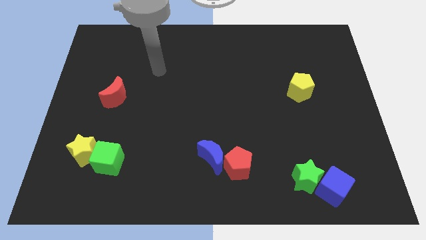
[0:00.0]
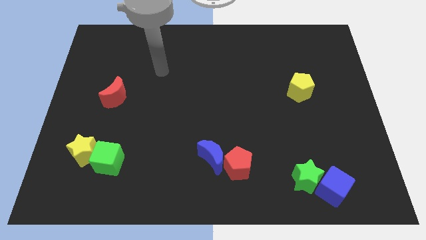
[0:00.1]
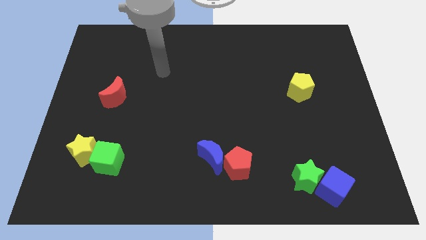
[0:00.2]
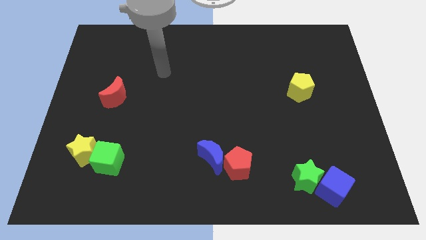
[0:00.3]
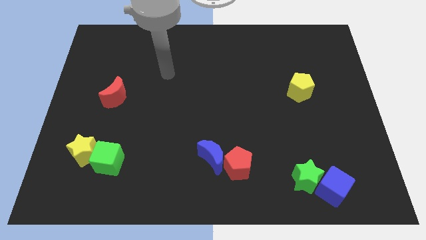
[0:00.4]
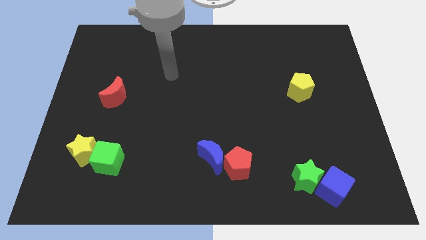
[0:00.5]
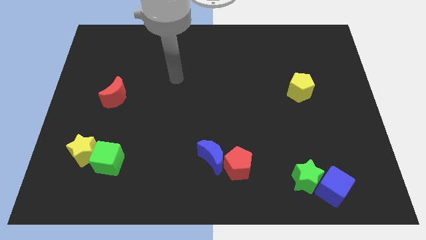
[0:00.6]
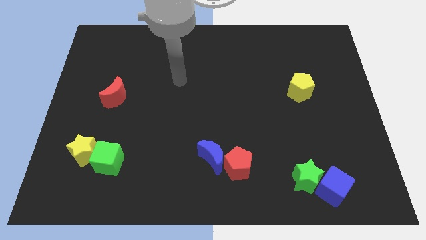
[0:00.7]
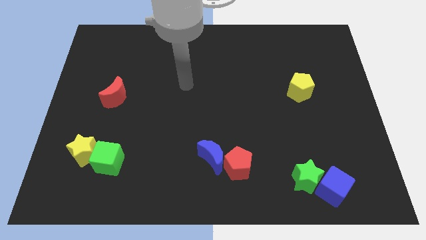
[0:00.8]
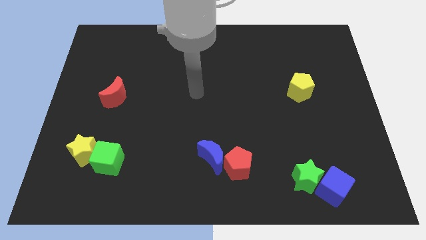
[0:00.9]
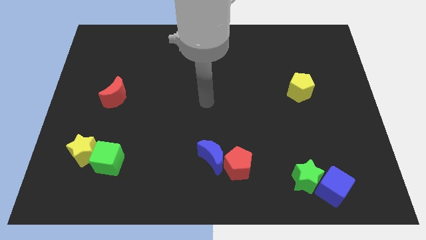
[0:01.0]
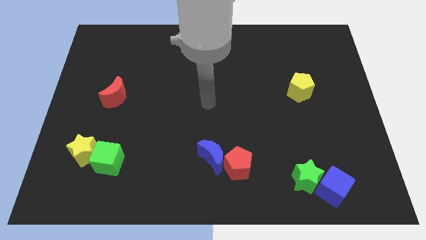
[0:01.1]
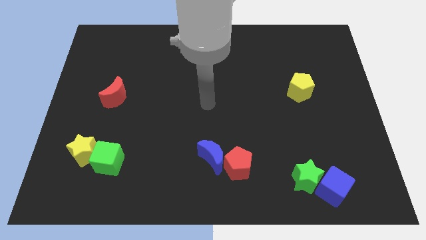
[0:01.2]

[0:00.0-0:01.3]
put your arm at the center of the board

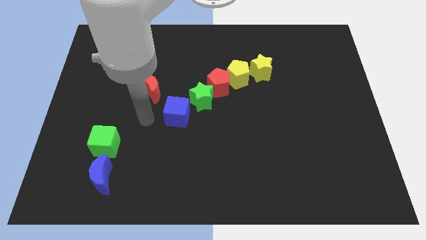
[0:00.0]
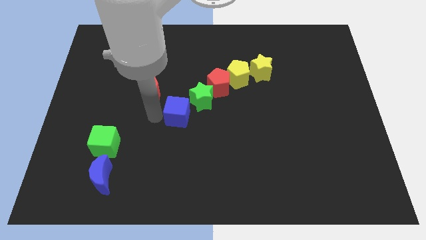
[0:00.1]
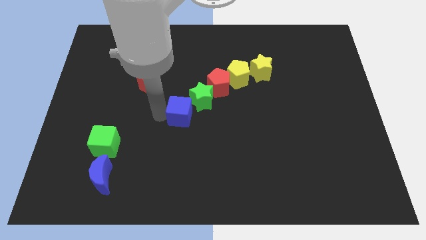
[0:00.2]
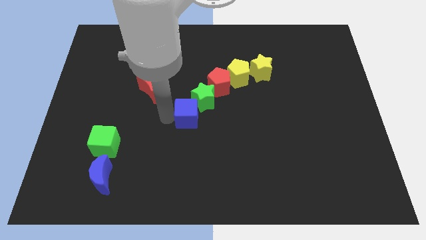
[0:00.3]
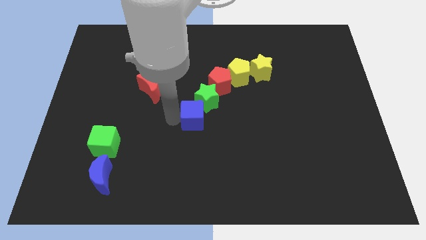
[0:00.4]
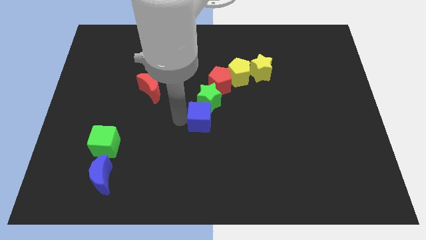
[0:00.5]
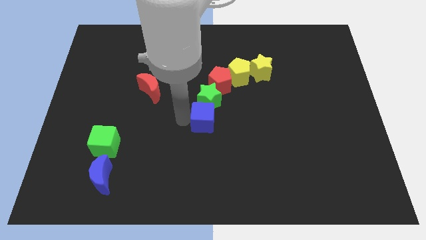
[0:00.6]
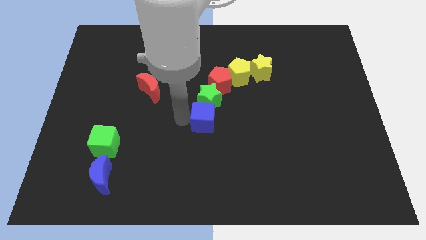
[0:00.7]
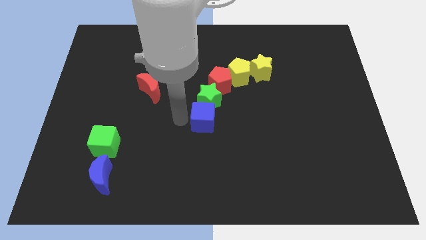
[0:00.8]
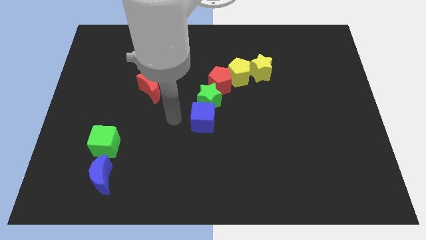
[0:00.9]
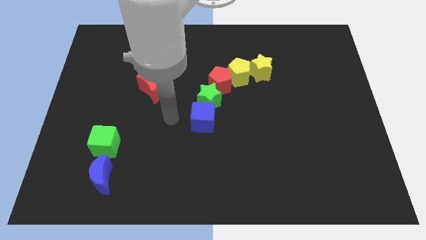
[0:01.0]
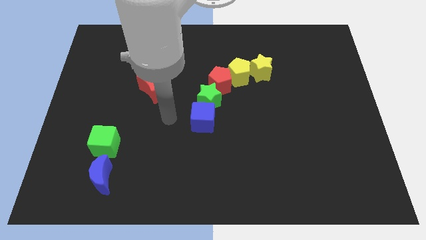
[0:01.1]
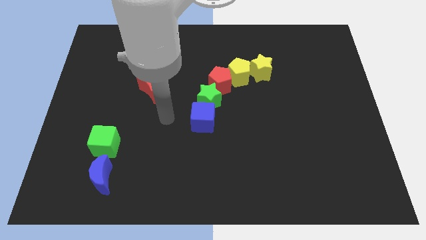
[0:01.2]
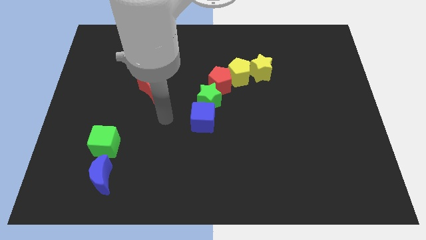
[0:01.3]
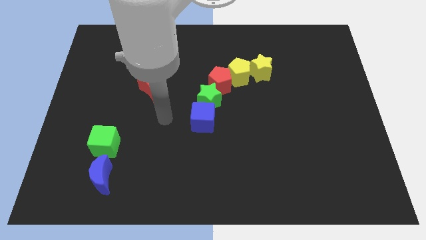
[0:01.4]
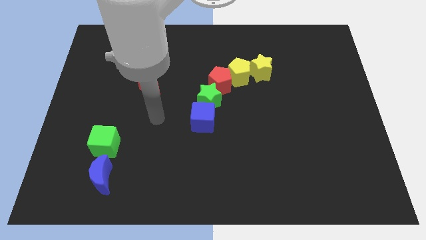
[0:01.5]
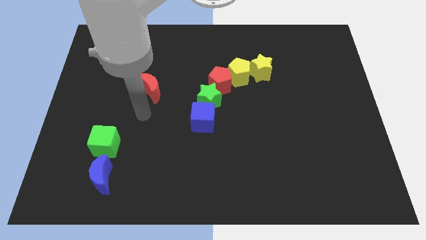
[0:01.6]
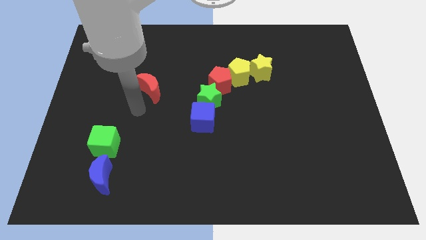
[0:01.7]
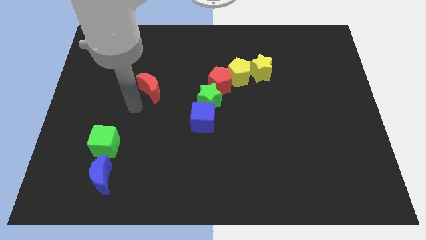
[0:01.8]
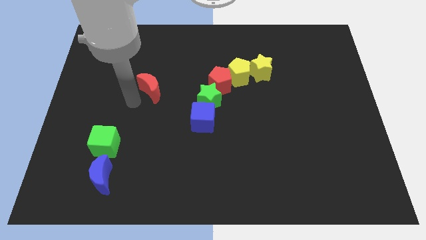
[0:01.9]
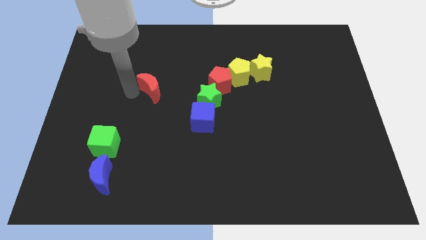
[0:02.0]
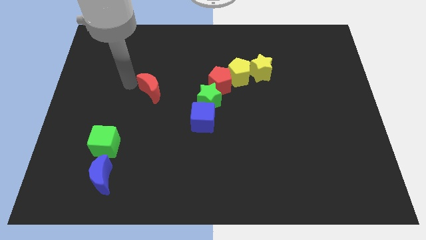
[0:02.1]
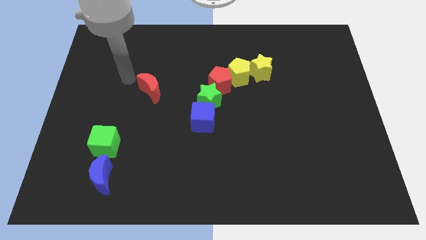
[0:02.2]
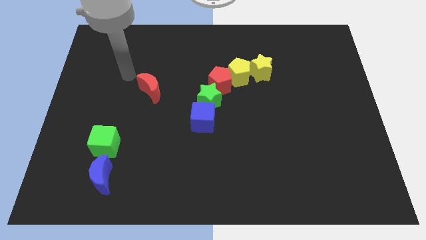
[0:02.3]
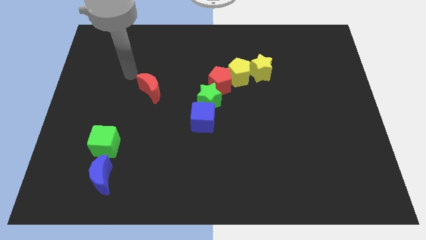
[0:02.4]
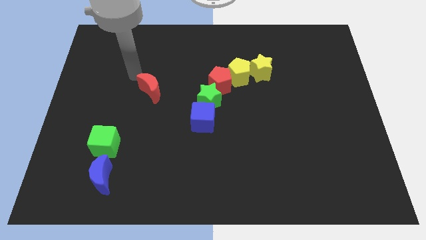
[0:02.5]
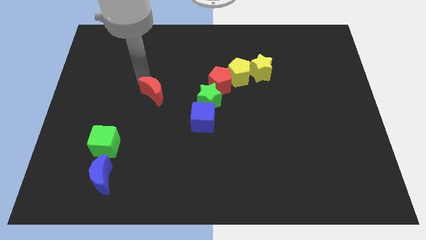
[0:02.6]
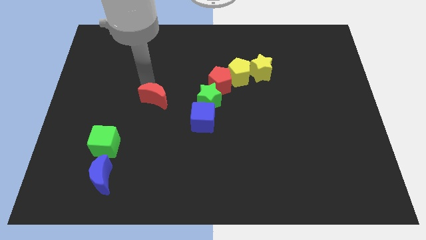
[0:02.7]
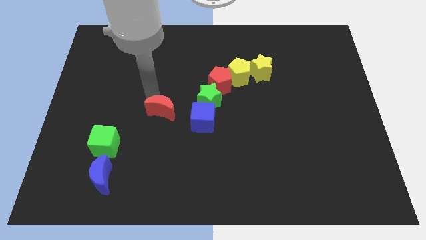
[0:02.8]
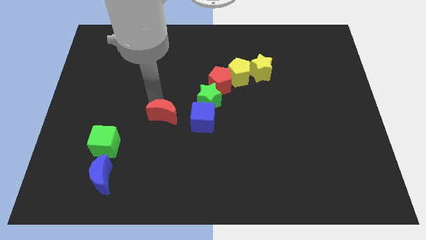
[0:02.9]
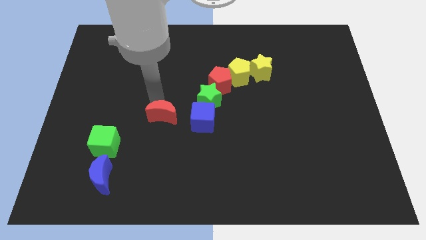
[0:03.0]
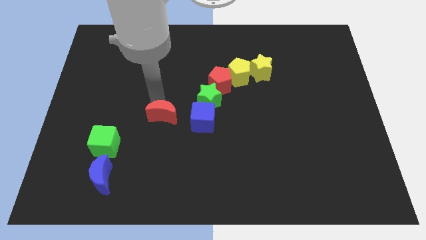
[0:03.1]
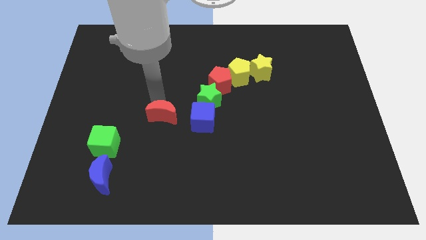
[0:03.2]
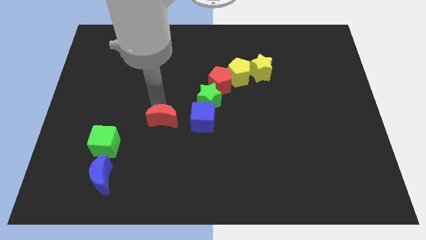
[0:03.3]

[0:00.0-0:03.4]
move the red moon left to the blue cube

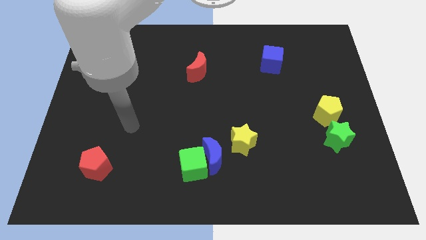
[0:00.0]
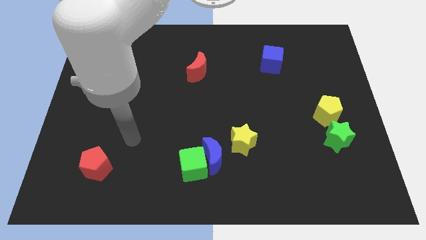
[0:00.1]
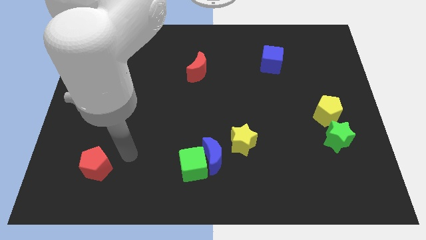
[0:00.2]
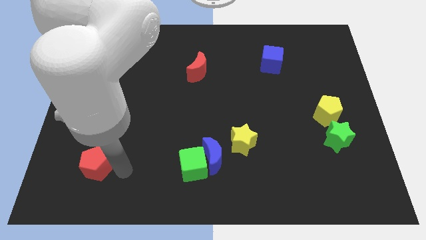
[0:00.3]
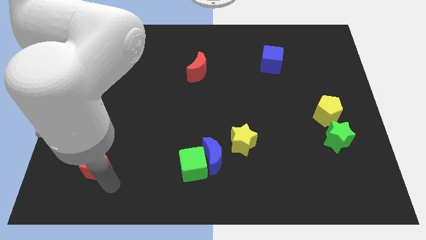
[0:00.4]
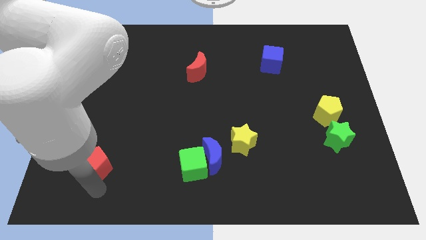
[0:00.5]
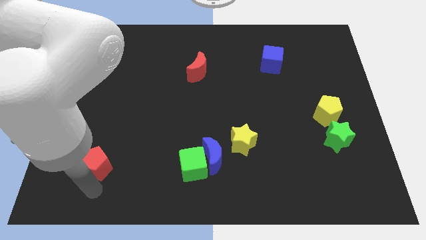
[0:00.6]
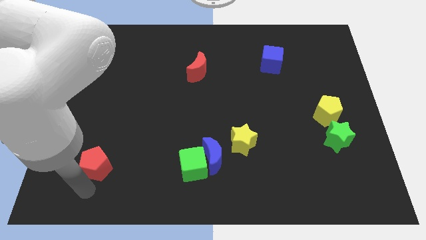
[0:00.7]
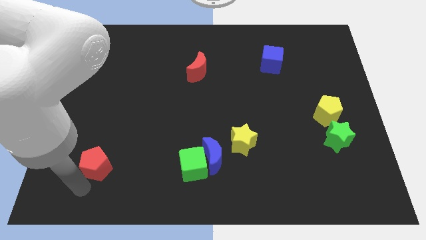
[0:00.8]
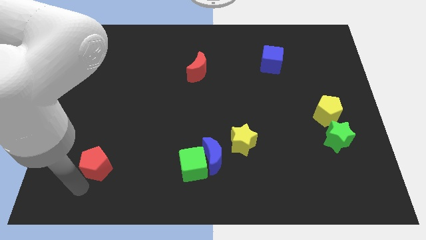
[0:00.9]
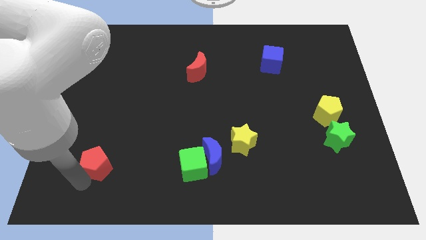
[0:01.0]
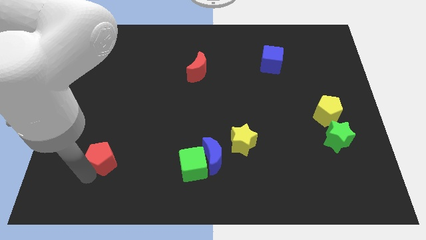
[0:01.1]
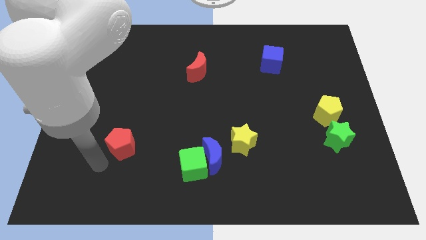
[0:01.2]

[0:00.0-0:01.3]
touch the red pentagon

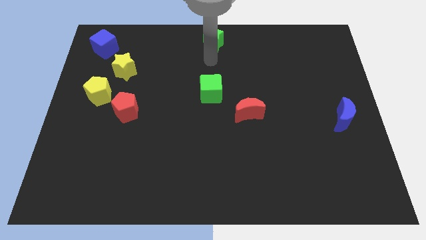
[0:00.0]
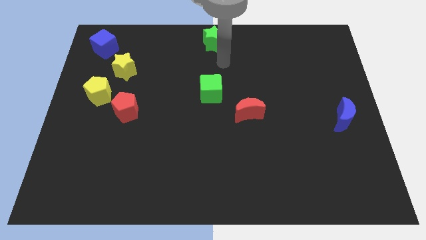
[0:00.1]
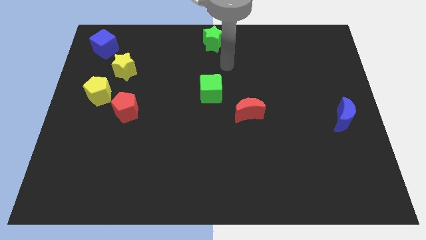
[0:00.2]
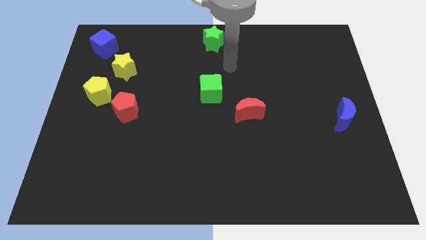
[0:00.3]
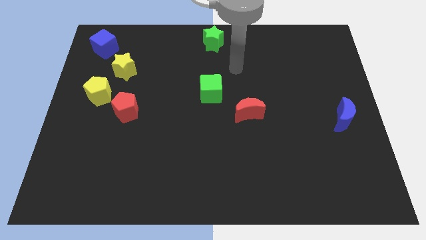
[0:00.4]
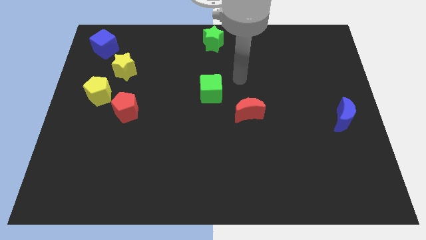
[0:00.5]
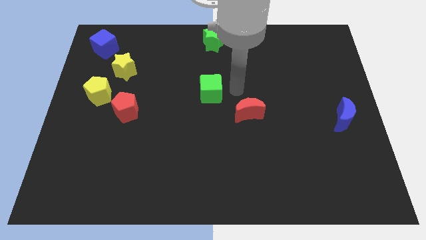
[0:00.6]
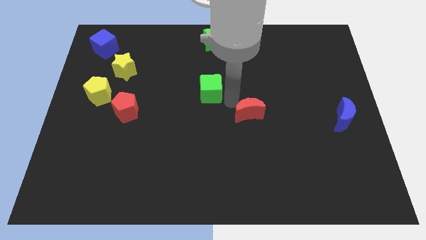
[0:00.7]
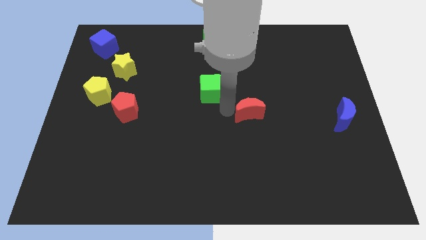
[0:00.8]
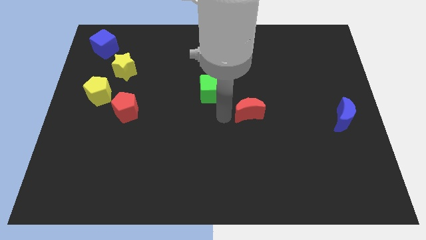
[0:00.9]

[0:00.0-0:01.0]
place your arm to the left side of red crescent

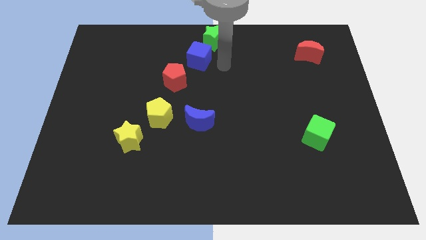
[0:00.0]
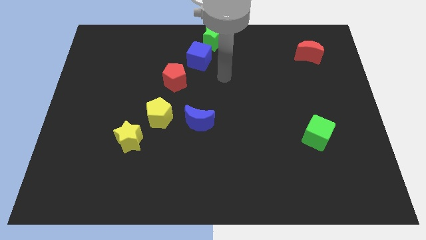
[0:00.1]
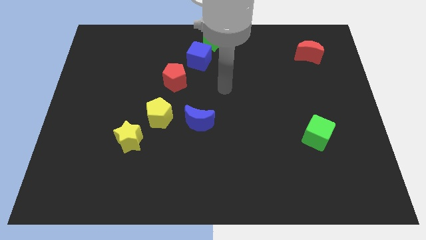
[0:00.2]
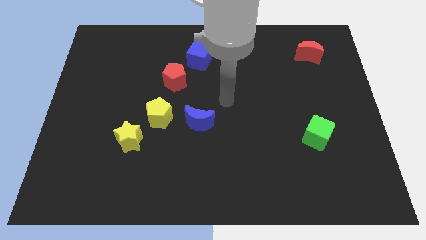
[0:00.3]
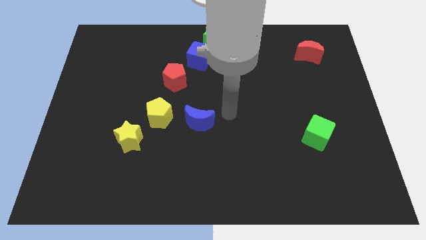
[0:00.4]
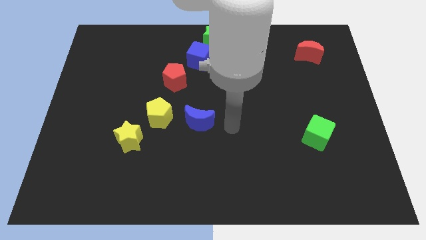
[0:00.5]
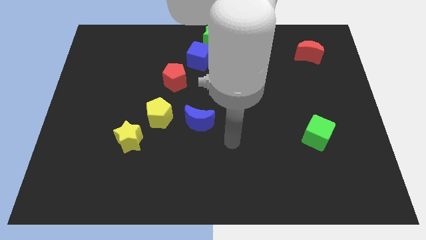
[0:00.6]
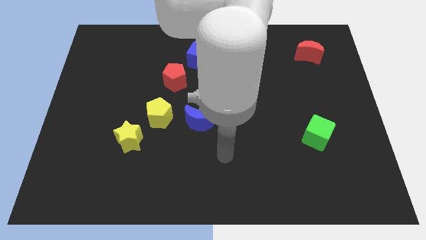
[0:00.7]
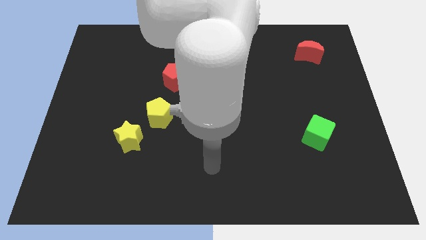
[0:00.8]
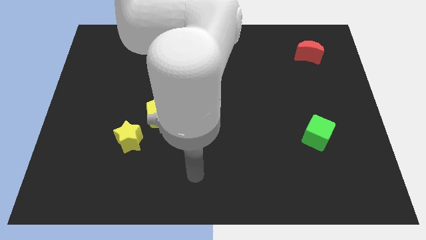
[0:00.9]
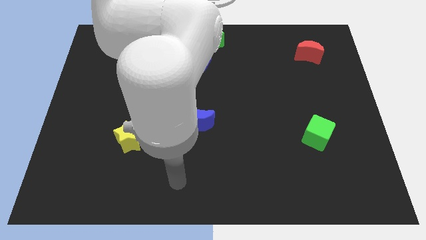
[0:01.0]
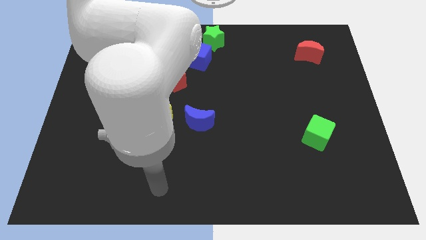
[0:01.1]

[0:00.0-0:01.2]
move the arm away from the green star

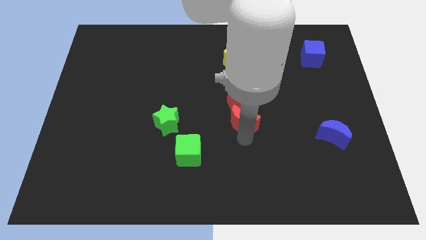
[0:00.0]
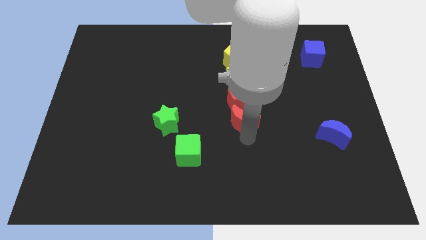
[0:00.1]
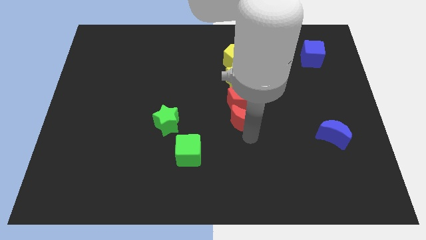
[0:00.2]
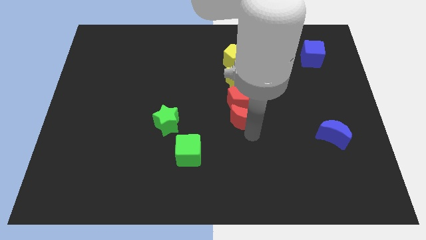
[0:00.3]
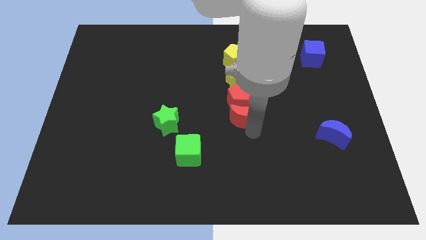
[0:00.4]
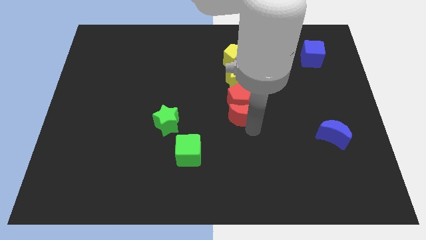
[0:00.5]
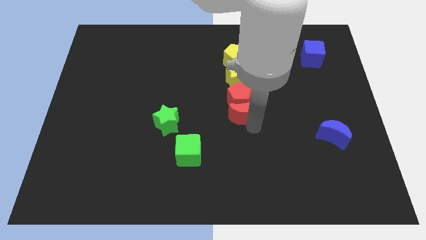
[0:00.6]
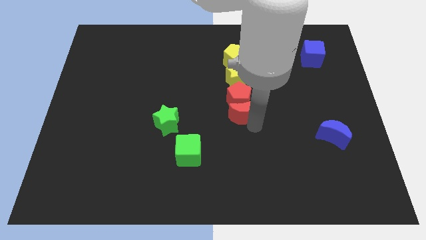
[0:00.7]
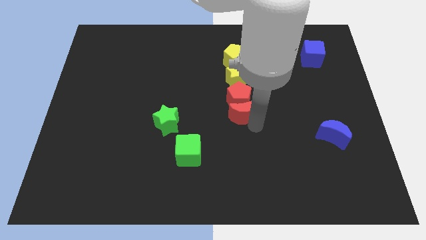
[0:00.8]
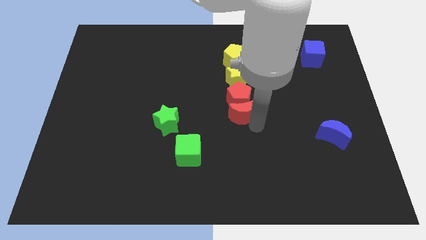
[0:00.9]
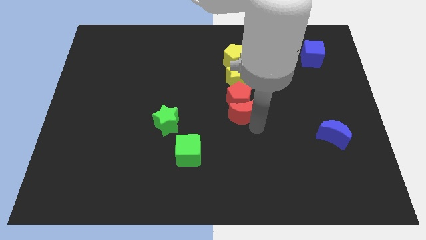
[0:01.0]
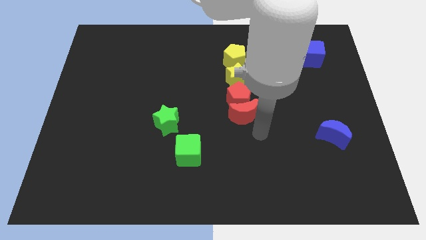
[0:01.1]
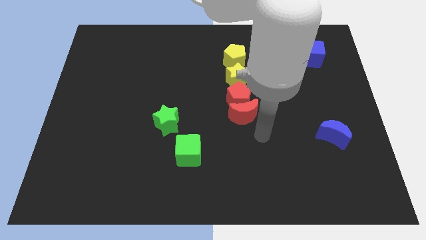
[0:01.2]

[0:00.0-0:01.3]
push red moon in to red pentagon
